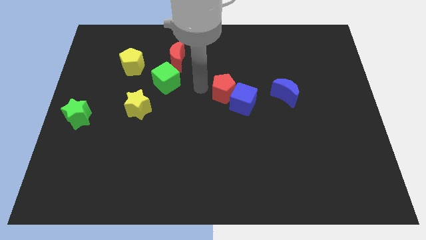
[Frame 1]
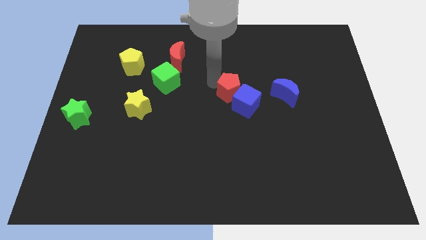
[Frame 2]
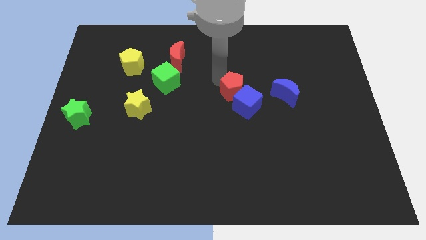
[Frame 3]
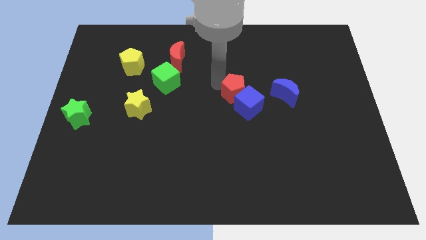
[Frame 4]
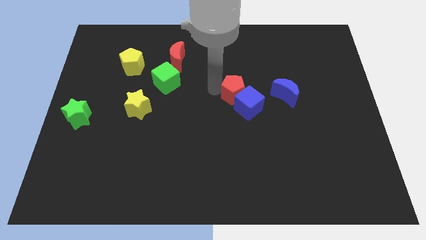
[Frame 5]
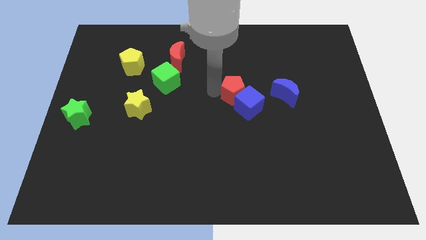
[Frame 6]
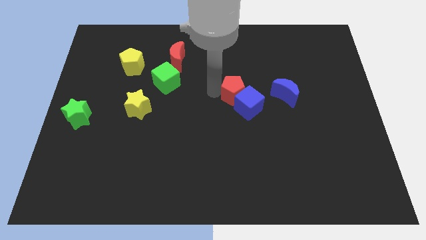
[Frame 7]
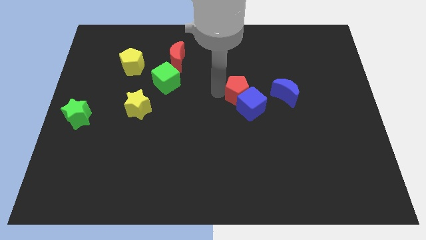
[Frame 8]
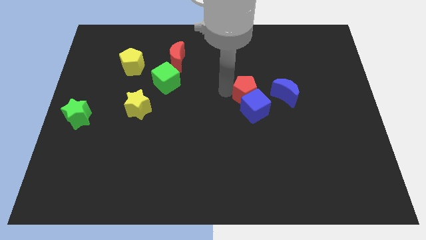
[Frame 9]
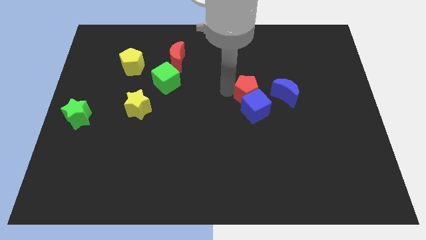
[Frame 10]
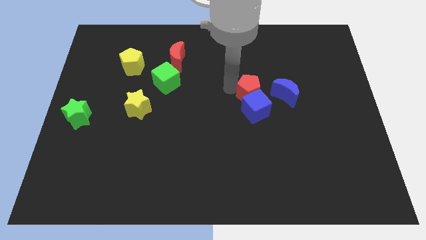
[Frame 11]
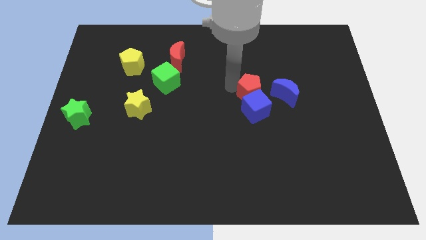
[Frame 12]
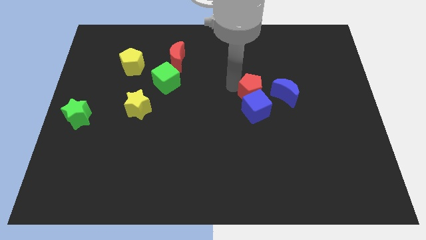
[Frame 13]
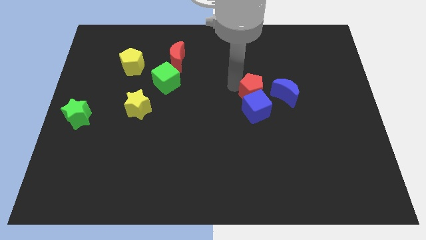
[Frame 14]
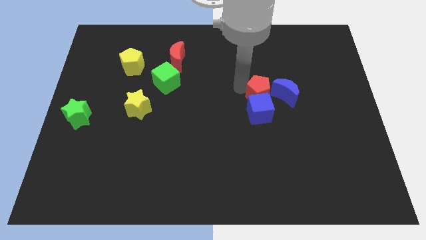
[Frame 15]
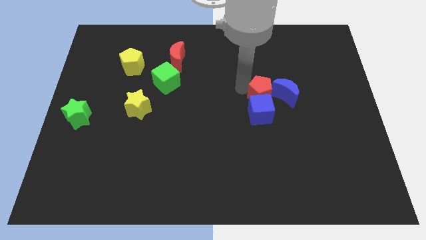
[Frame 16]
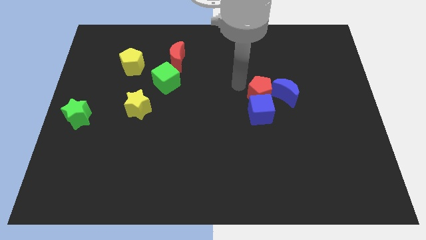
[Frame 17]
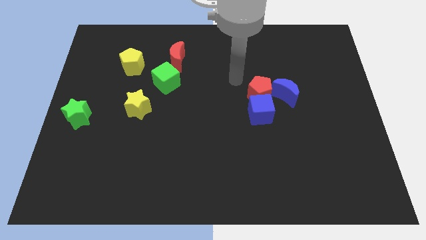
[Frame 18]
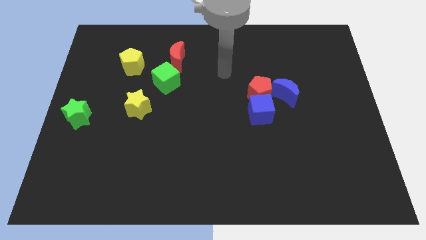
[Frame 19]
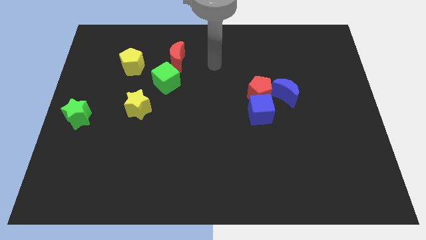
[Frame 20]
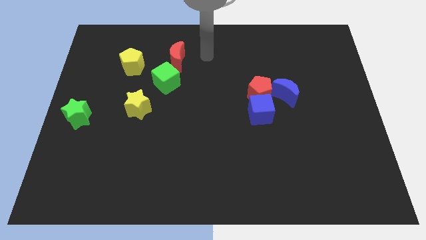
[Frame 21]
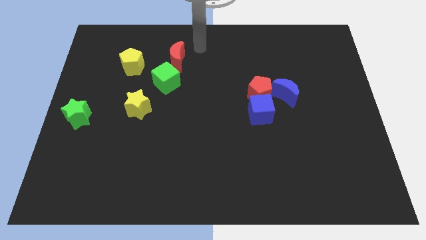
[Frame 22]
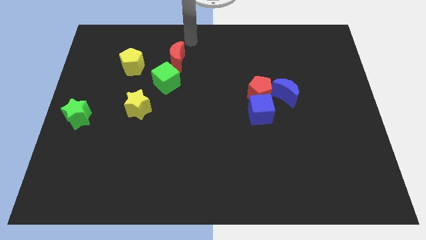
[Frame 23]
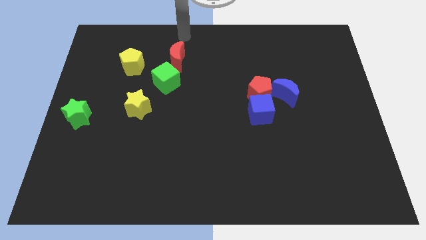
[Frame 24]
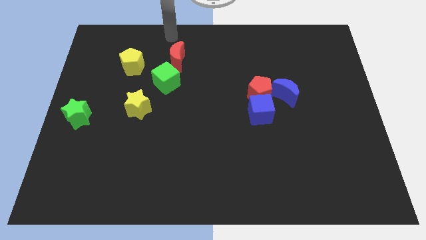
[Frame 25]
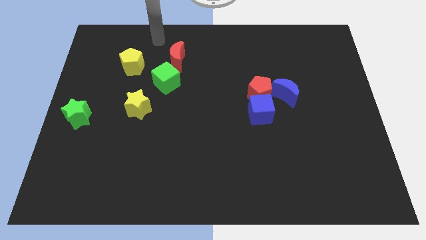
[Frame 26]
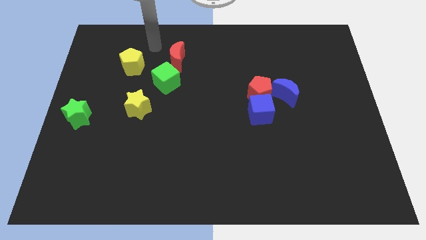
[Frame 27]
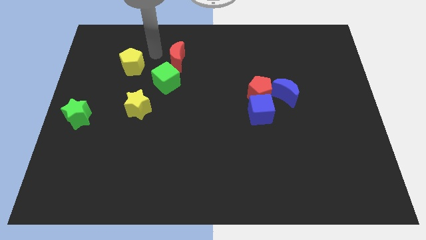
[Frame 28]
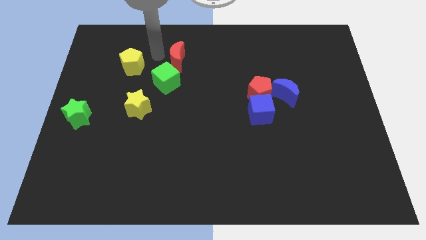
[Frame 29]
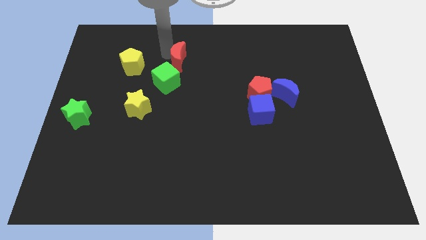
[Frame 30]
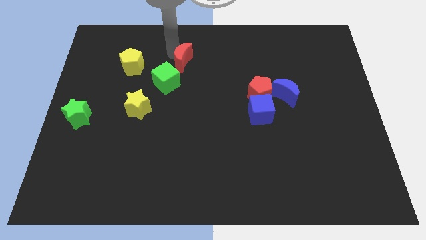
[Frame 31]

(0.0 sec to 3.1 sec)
push the red pentagon into the blue cube

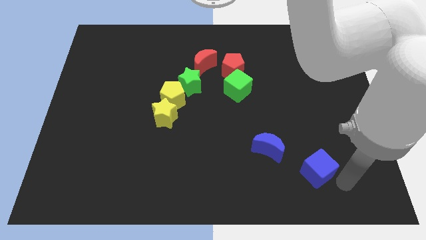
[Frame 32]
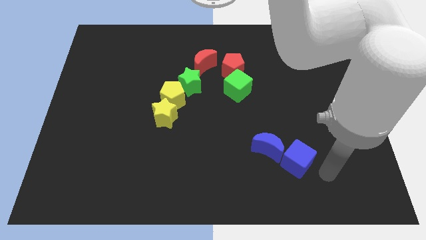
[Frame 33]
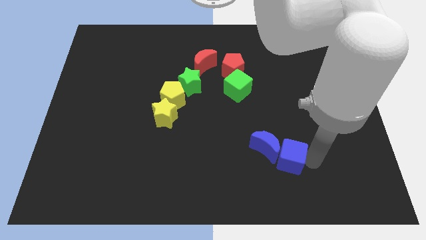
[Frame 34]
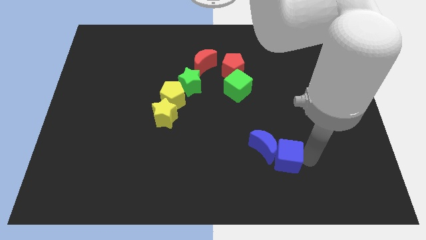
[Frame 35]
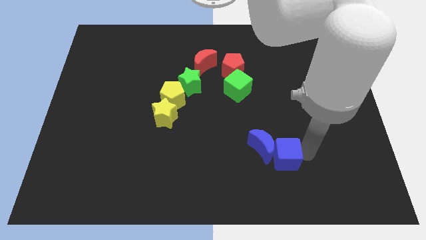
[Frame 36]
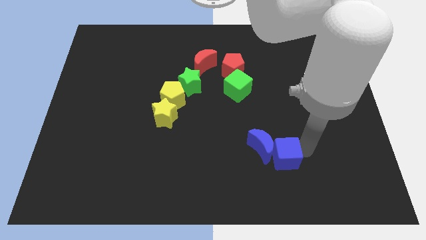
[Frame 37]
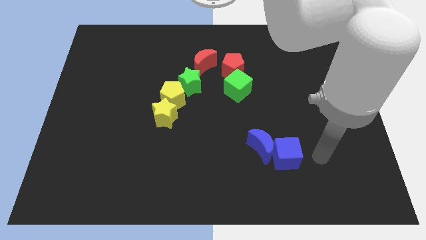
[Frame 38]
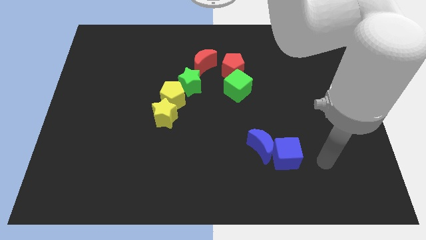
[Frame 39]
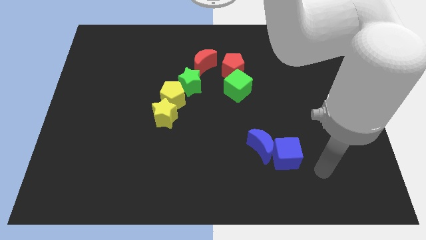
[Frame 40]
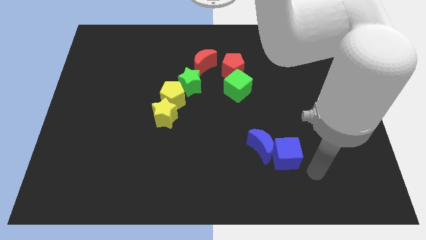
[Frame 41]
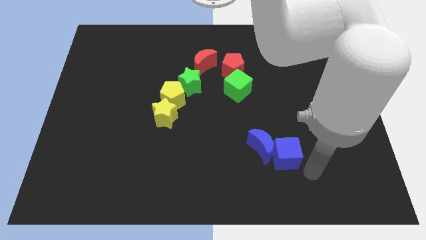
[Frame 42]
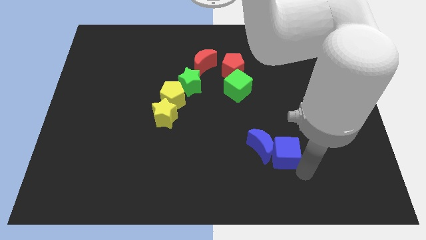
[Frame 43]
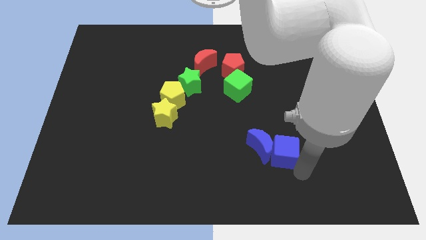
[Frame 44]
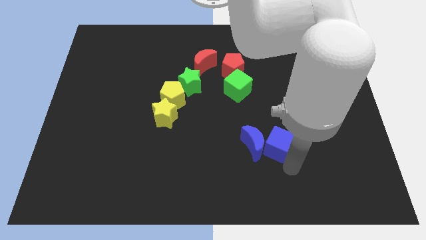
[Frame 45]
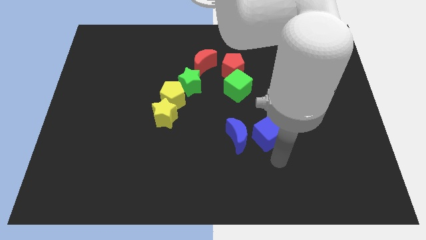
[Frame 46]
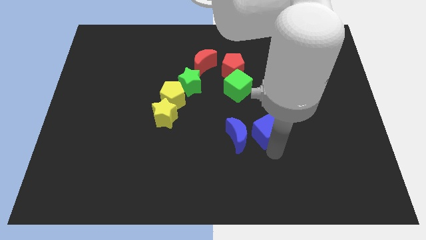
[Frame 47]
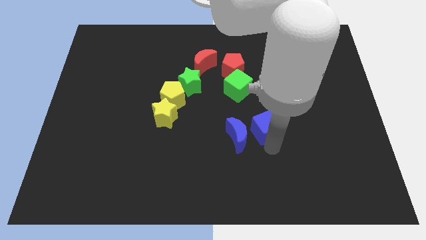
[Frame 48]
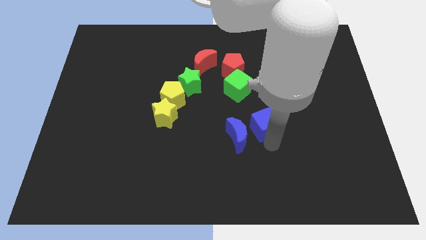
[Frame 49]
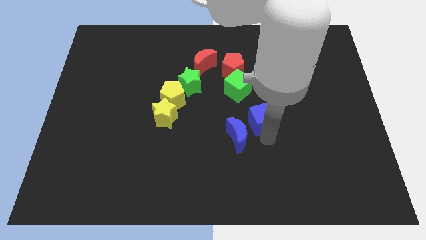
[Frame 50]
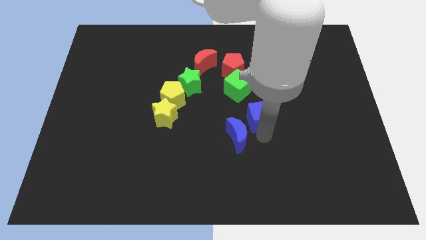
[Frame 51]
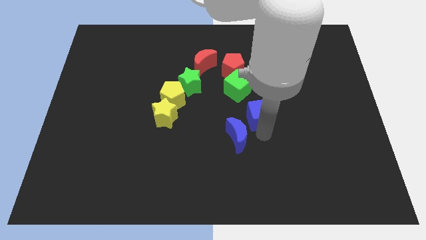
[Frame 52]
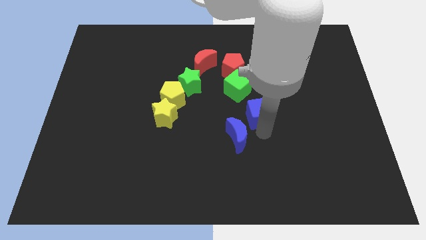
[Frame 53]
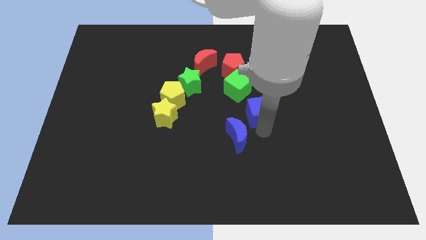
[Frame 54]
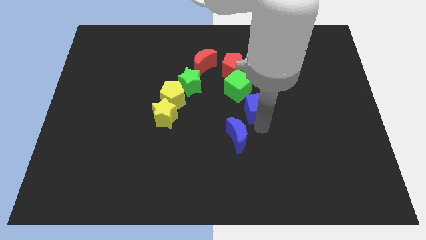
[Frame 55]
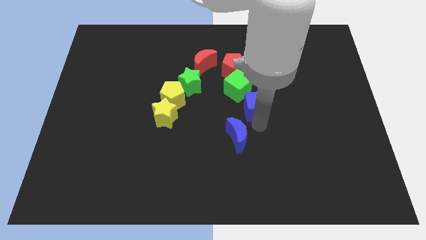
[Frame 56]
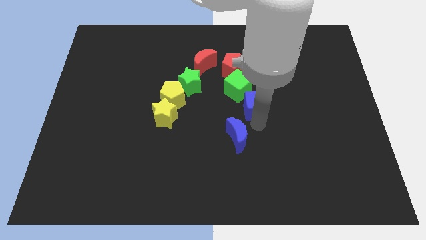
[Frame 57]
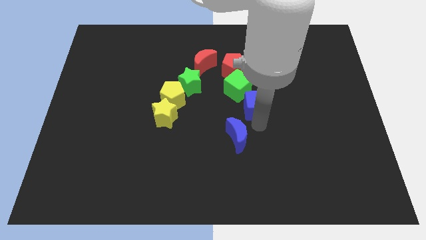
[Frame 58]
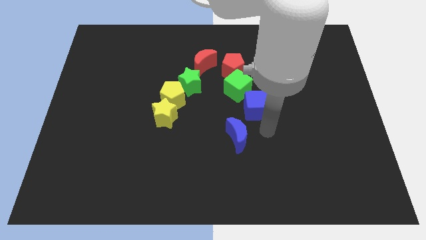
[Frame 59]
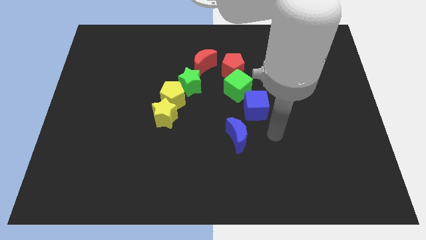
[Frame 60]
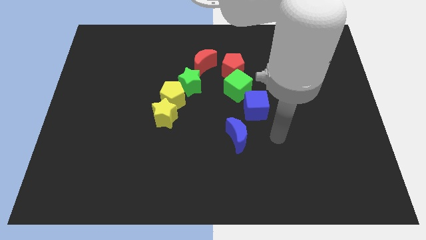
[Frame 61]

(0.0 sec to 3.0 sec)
move the blue cube to the bottom right of the green cube

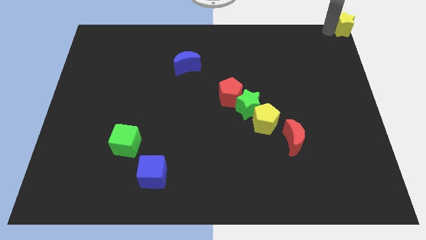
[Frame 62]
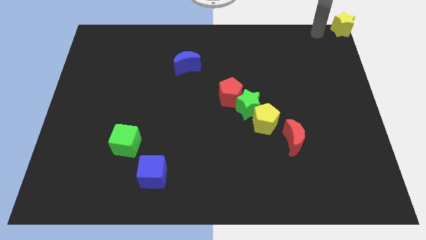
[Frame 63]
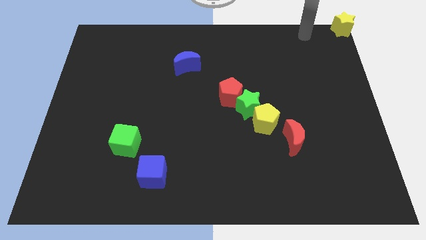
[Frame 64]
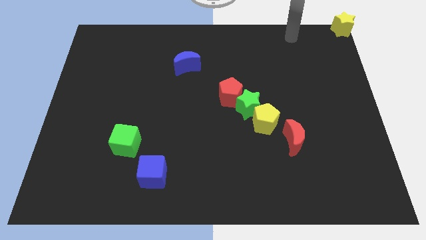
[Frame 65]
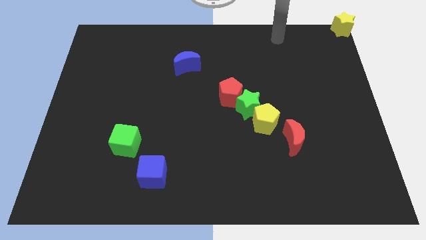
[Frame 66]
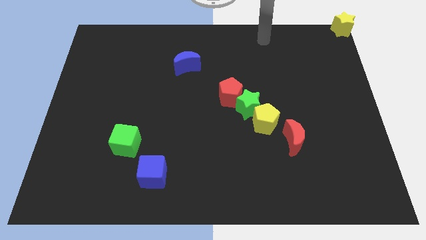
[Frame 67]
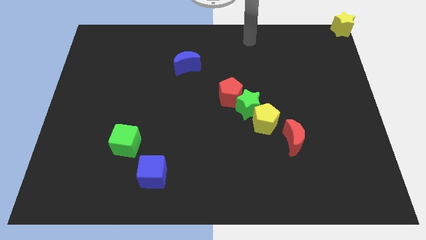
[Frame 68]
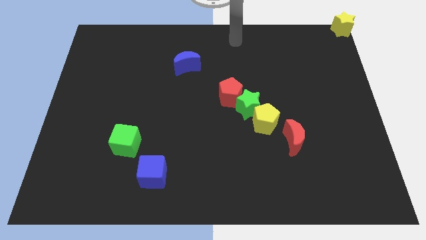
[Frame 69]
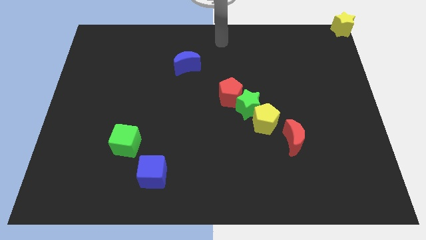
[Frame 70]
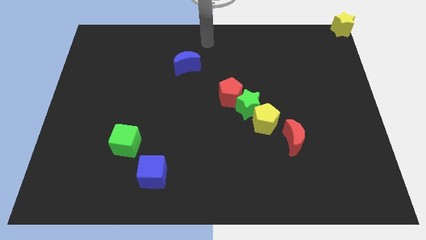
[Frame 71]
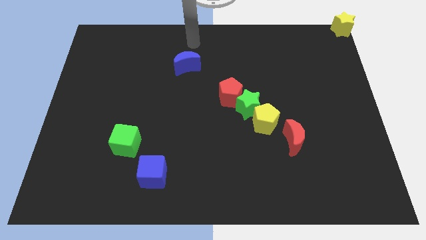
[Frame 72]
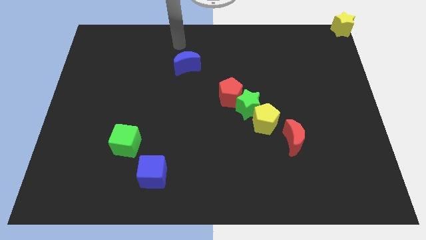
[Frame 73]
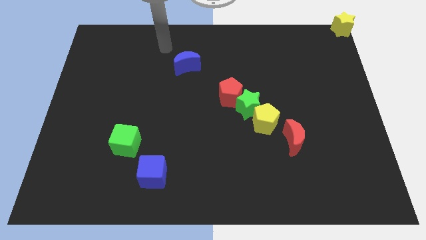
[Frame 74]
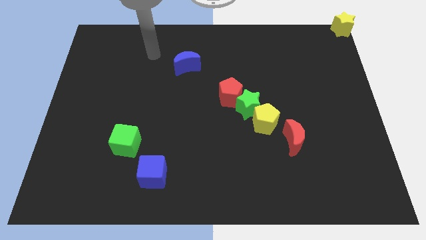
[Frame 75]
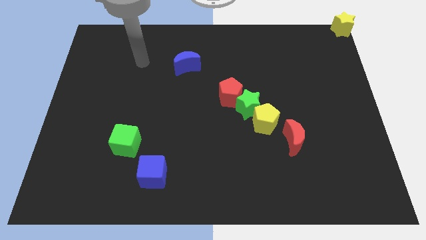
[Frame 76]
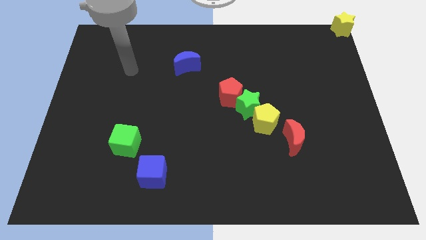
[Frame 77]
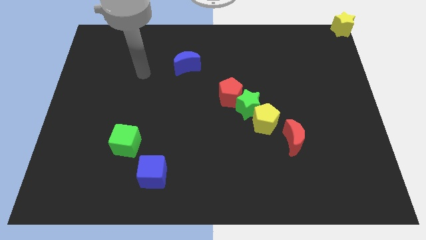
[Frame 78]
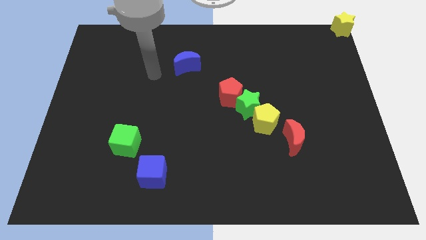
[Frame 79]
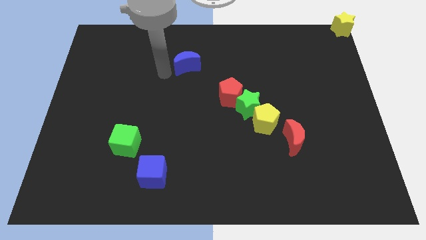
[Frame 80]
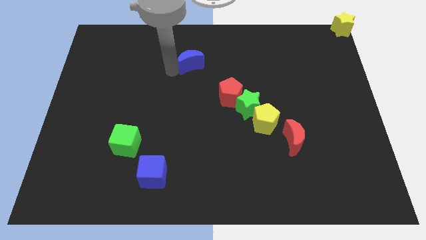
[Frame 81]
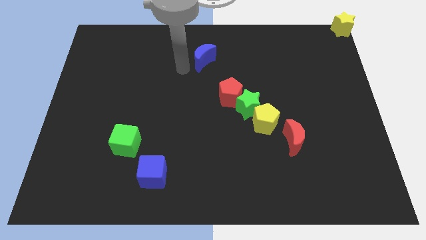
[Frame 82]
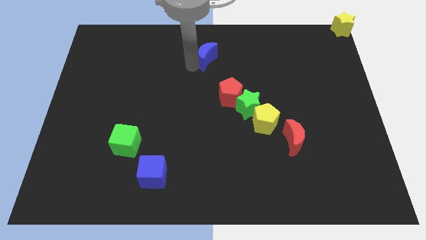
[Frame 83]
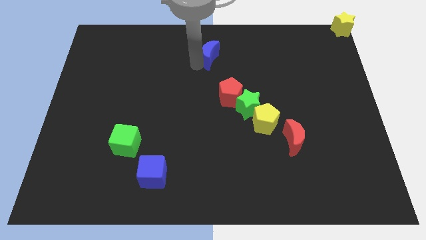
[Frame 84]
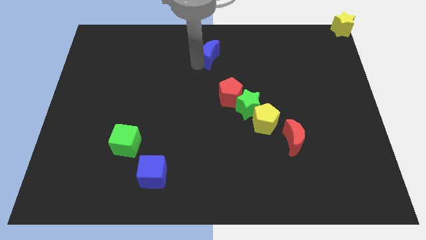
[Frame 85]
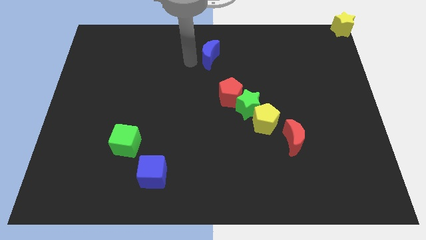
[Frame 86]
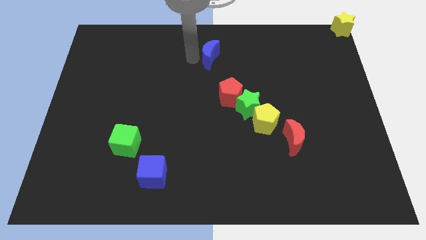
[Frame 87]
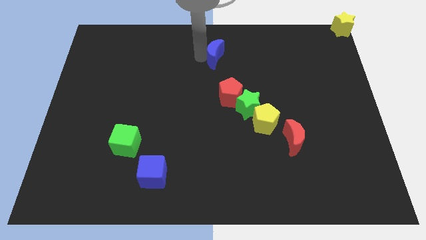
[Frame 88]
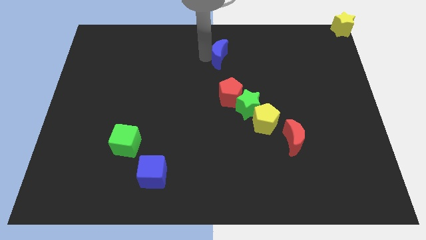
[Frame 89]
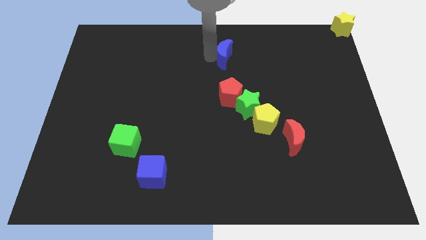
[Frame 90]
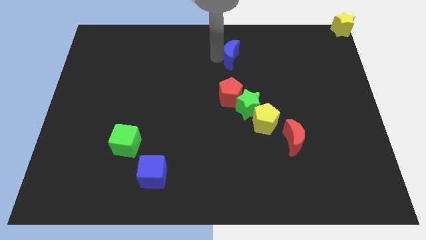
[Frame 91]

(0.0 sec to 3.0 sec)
move the blue crescent parallel to the top of the red pentagon

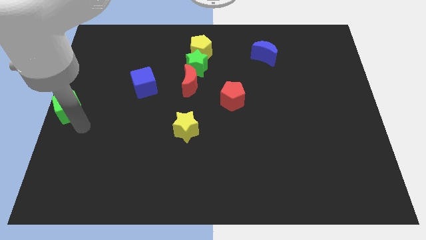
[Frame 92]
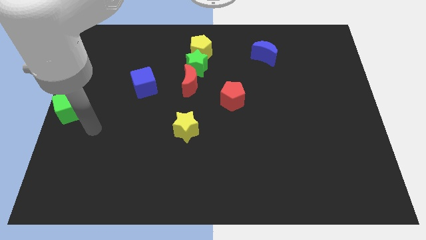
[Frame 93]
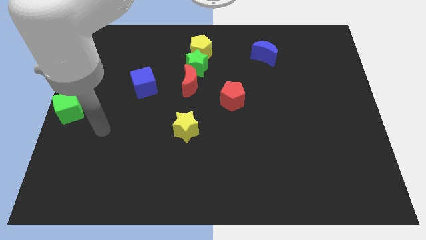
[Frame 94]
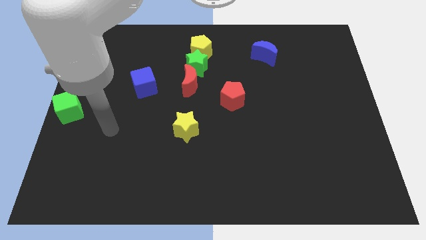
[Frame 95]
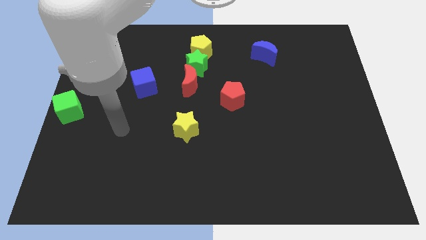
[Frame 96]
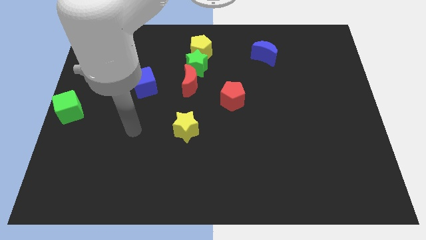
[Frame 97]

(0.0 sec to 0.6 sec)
move the arm away from the green cube
